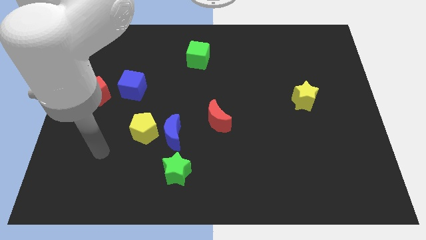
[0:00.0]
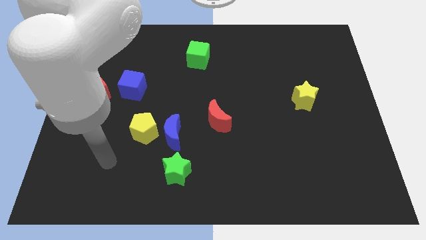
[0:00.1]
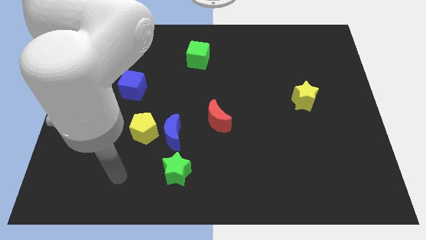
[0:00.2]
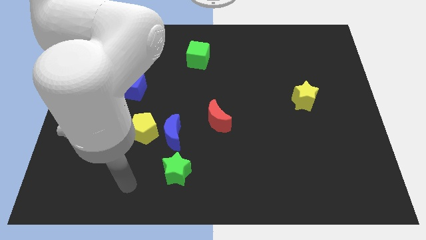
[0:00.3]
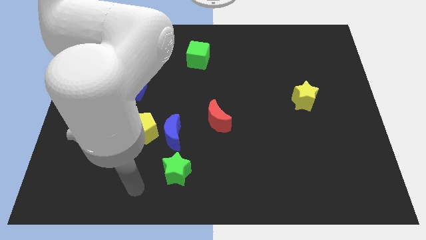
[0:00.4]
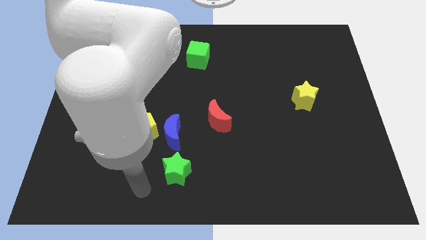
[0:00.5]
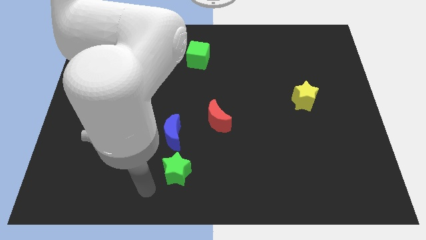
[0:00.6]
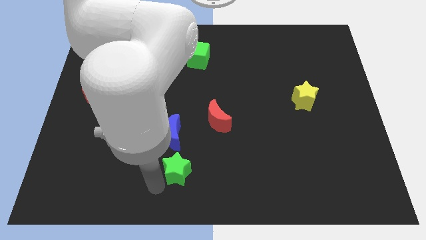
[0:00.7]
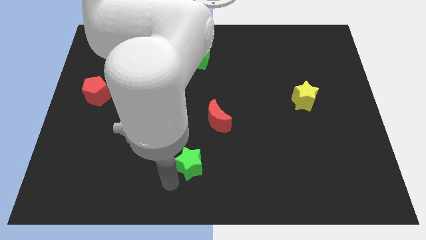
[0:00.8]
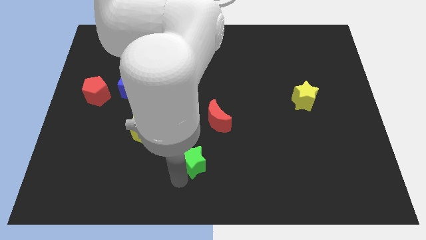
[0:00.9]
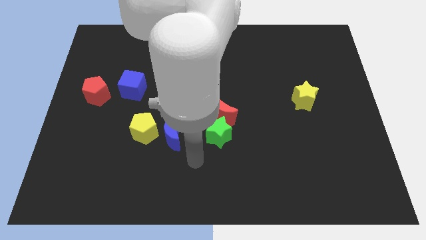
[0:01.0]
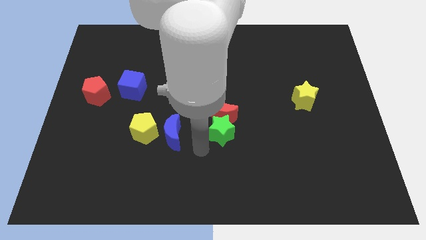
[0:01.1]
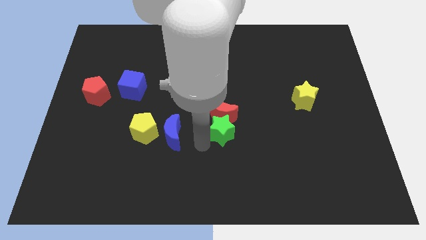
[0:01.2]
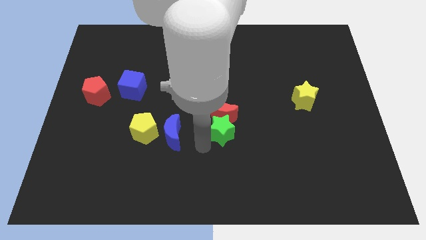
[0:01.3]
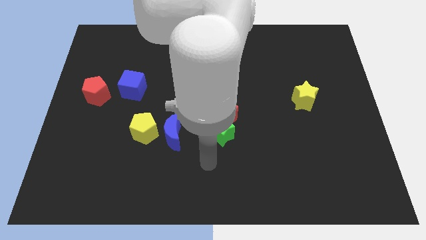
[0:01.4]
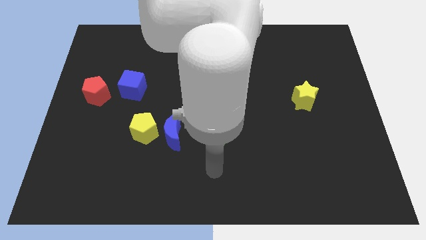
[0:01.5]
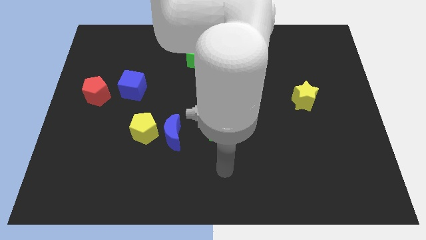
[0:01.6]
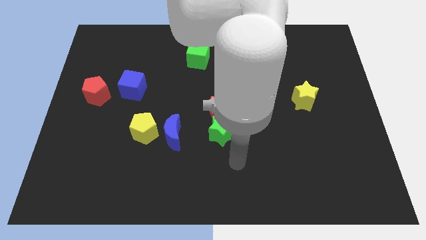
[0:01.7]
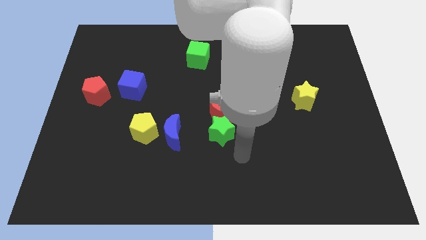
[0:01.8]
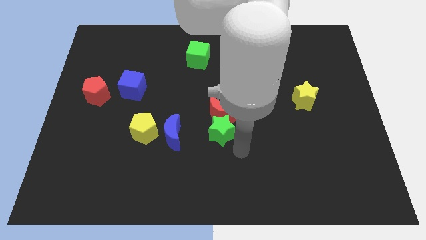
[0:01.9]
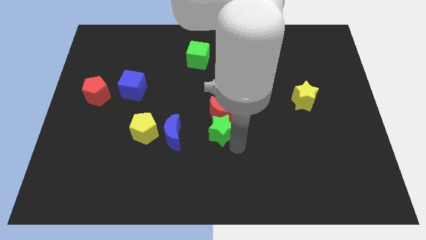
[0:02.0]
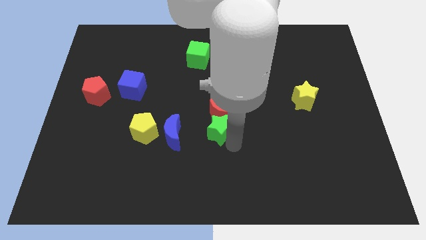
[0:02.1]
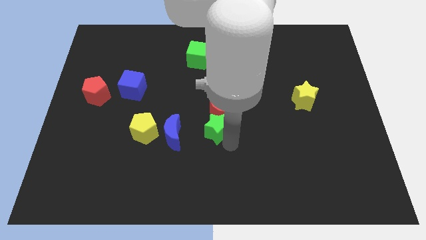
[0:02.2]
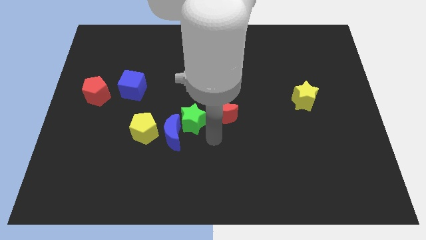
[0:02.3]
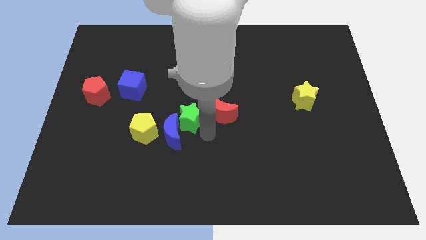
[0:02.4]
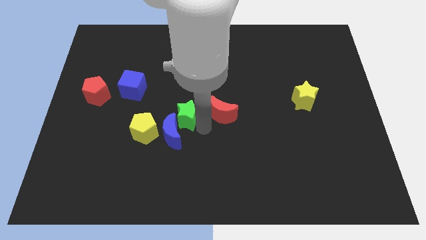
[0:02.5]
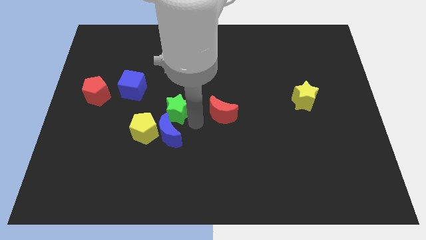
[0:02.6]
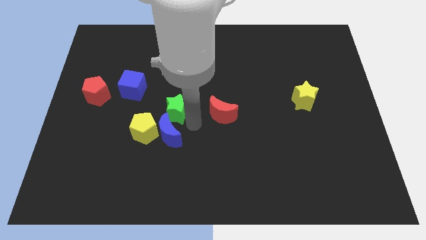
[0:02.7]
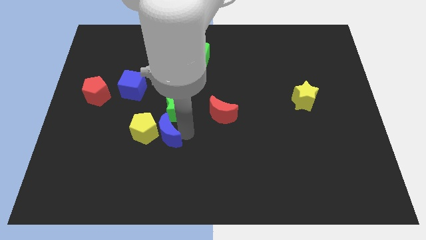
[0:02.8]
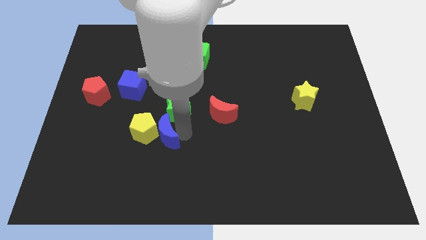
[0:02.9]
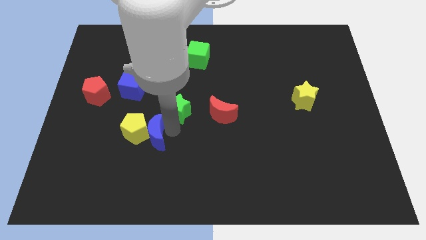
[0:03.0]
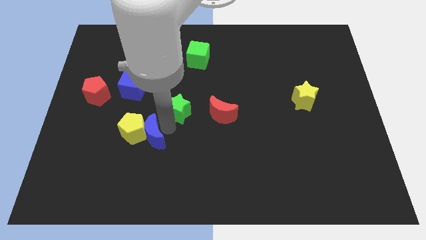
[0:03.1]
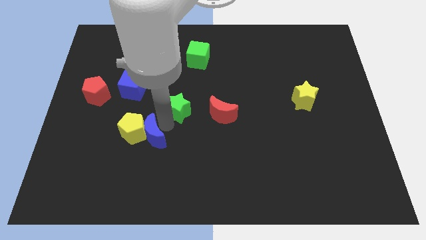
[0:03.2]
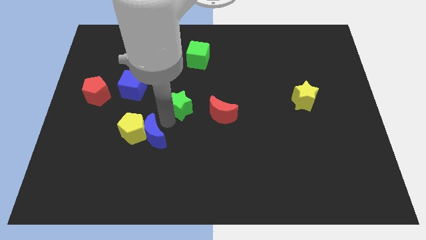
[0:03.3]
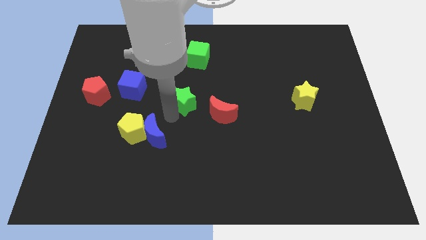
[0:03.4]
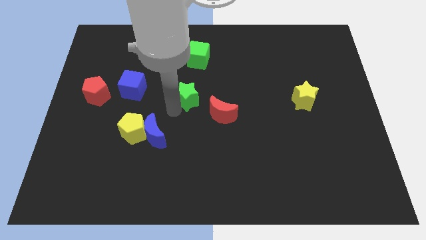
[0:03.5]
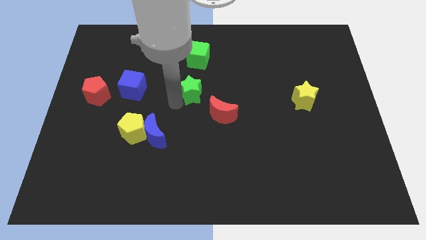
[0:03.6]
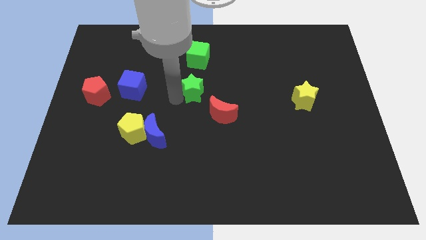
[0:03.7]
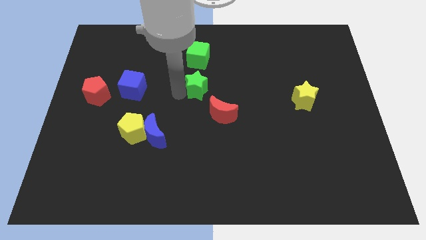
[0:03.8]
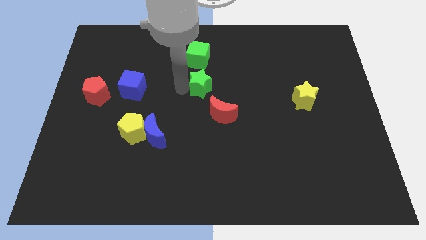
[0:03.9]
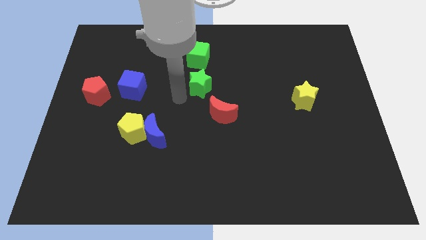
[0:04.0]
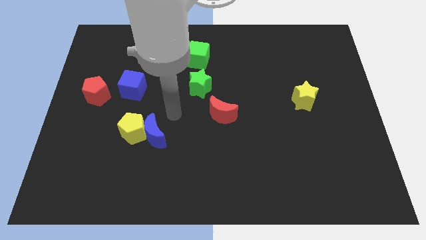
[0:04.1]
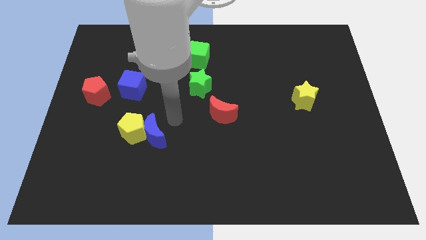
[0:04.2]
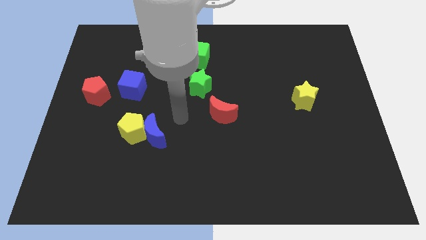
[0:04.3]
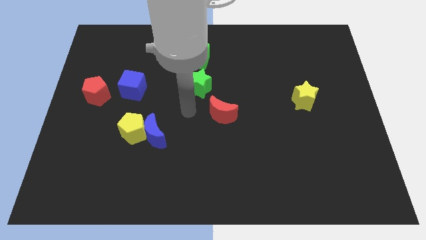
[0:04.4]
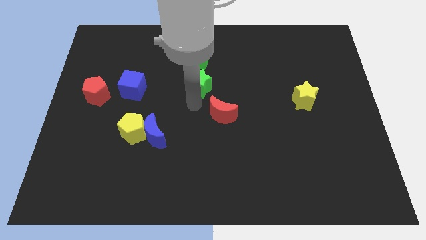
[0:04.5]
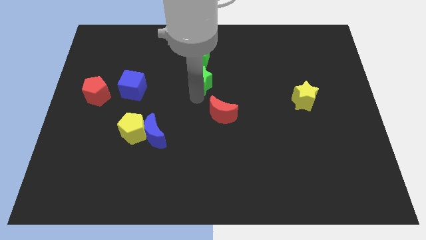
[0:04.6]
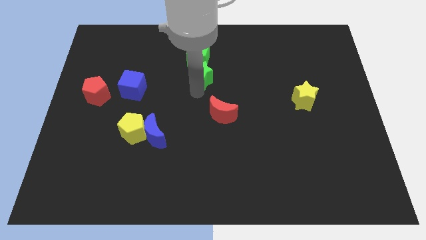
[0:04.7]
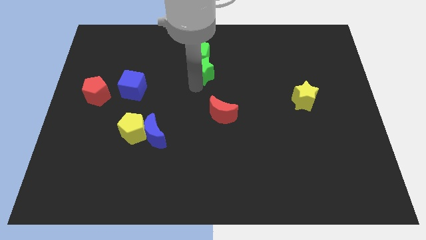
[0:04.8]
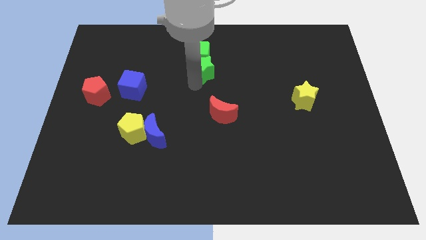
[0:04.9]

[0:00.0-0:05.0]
slide the green star next to the green cube

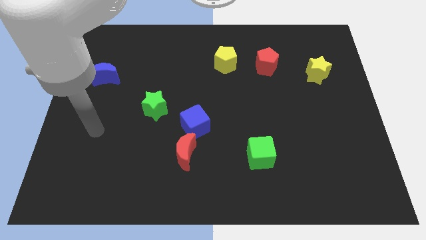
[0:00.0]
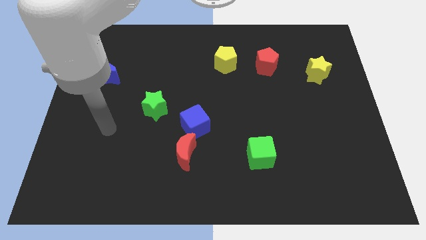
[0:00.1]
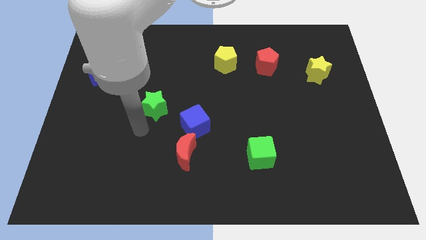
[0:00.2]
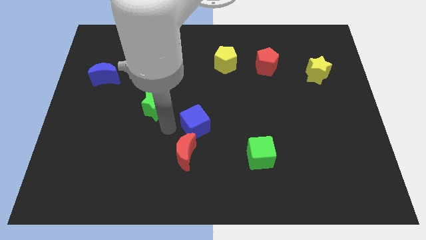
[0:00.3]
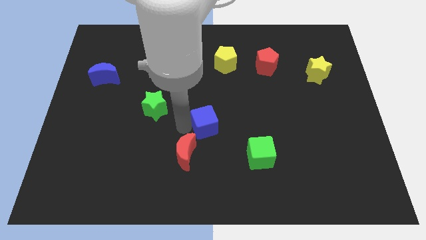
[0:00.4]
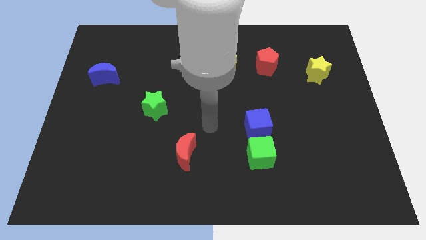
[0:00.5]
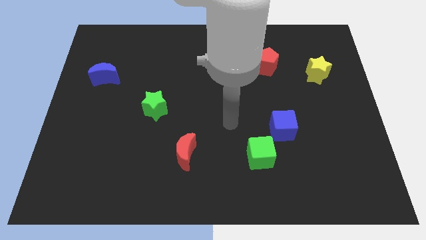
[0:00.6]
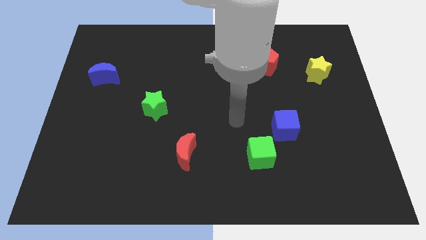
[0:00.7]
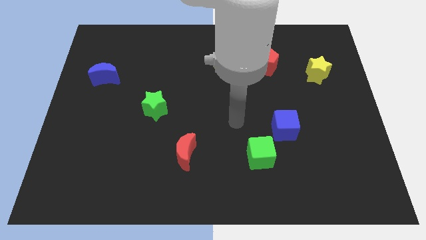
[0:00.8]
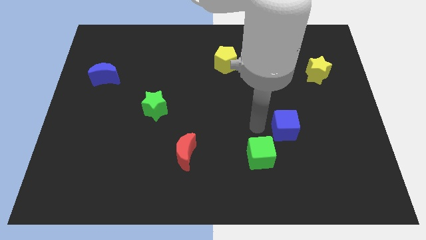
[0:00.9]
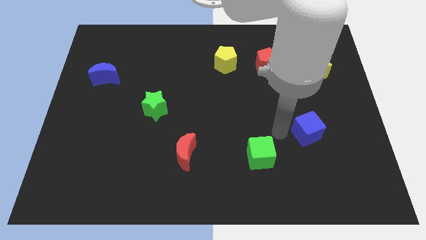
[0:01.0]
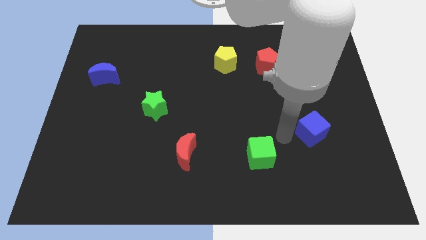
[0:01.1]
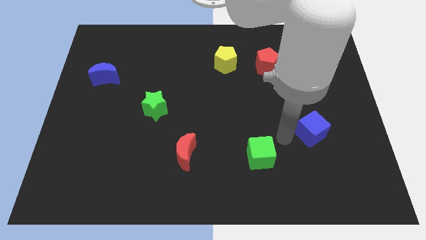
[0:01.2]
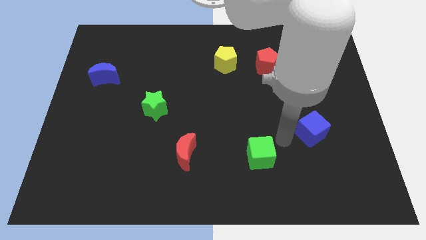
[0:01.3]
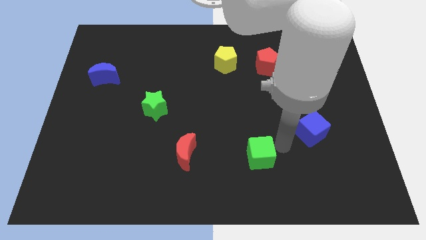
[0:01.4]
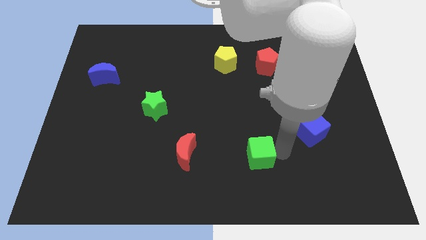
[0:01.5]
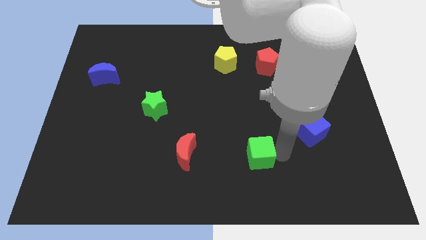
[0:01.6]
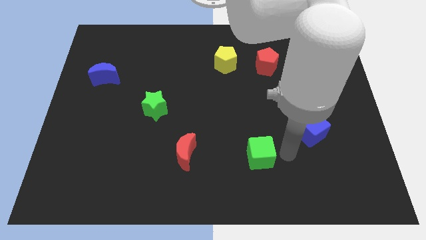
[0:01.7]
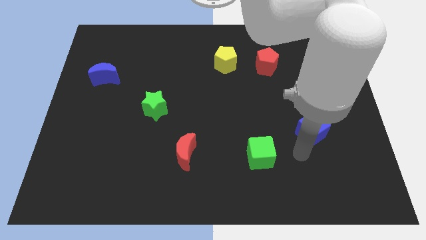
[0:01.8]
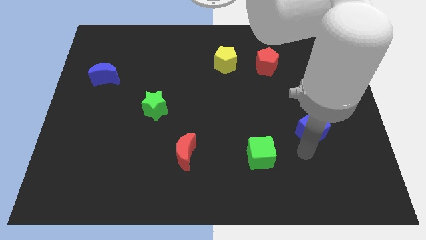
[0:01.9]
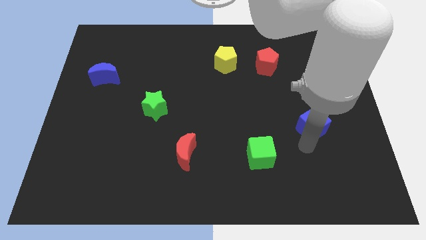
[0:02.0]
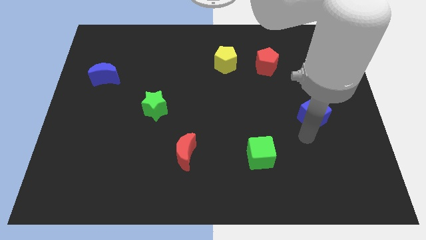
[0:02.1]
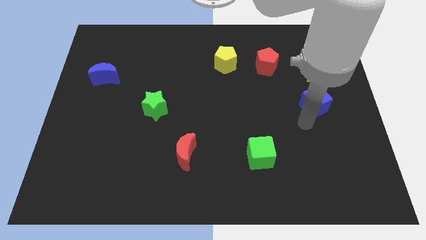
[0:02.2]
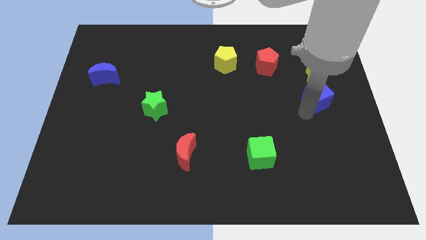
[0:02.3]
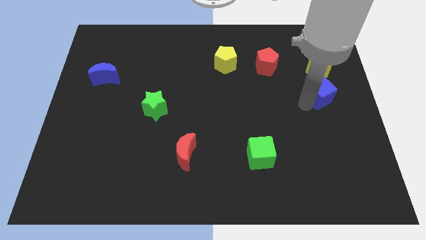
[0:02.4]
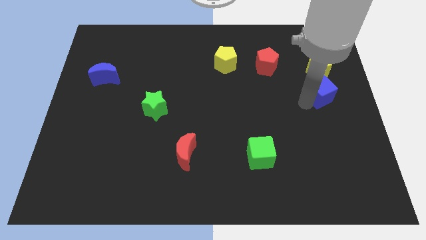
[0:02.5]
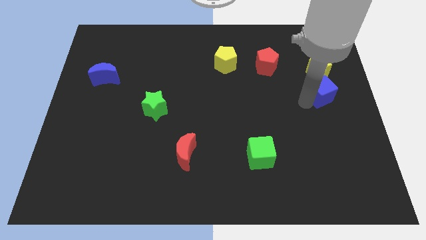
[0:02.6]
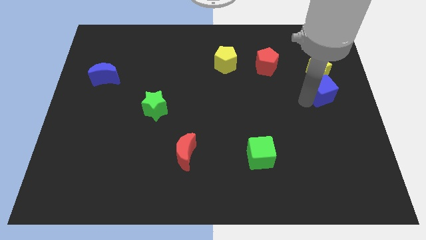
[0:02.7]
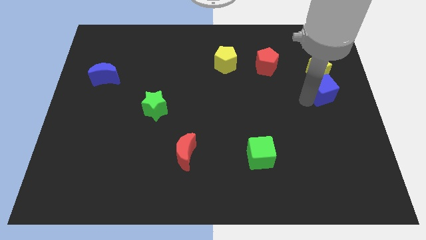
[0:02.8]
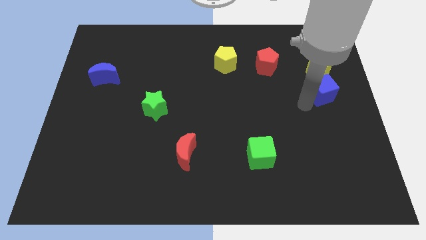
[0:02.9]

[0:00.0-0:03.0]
push the blue cube next to the yellow star

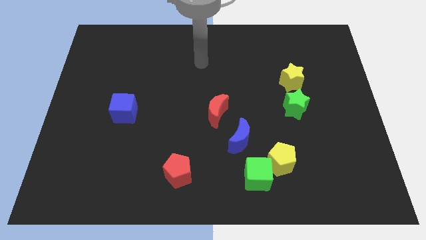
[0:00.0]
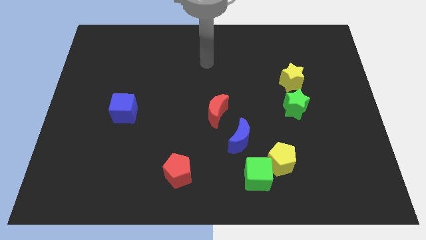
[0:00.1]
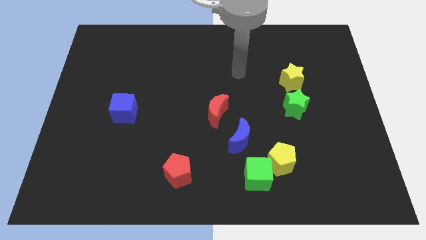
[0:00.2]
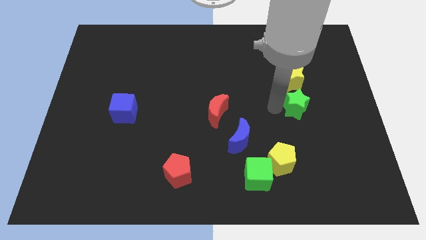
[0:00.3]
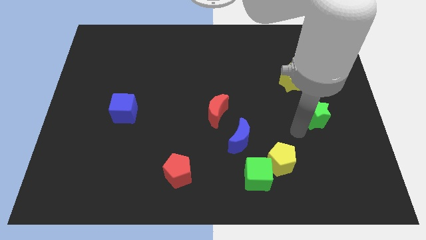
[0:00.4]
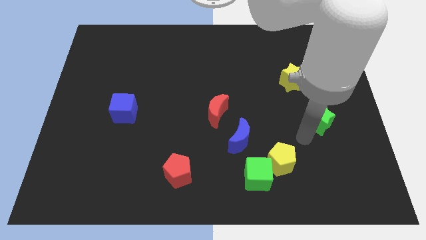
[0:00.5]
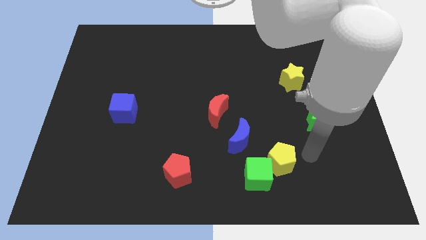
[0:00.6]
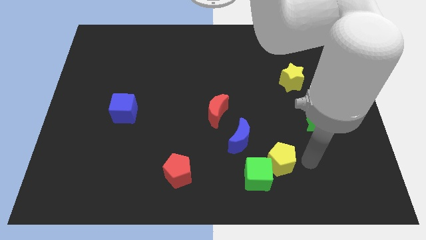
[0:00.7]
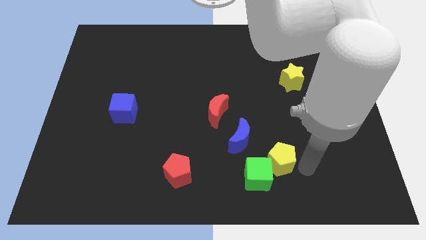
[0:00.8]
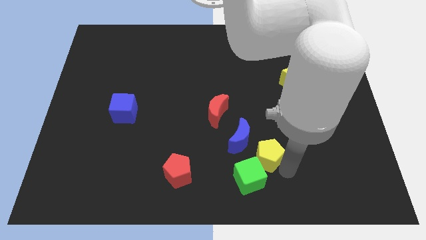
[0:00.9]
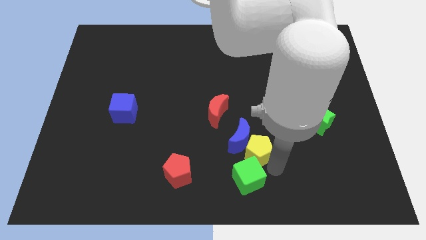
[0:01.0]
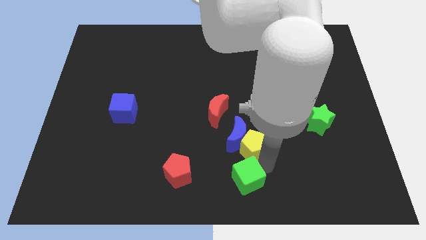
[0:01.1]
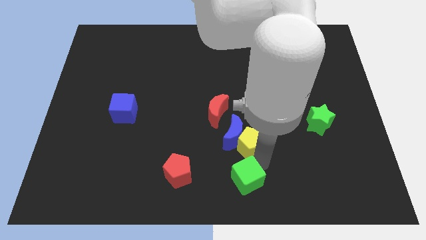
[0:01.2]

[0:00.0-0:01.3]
move the yellow pentagon close to the blue moon
